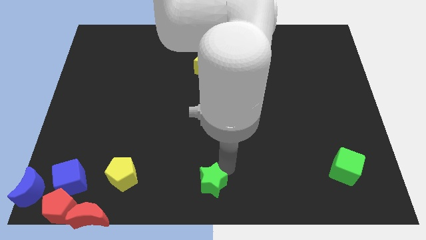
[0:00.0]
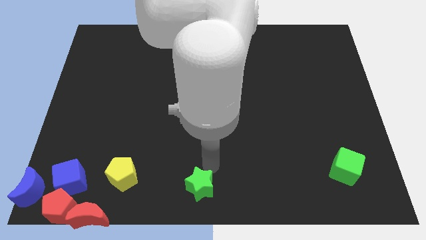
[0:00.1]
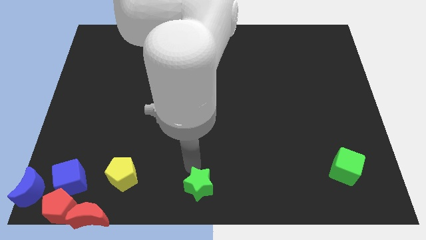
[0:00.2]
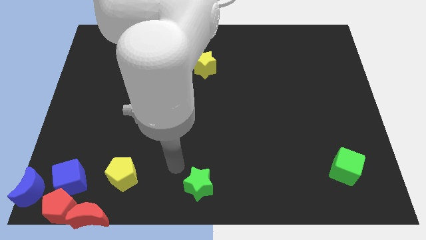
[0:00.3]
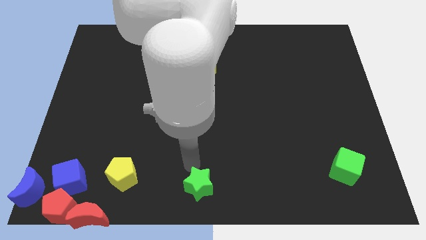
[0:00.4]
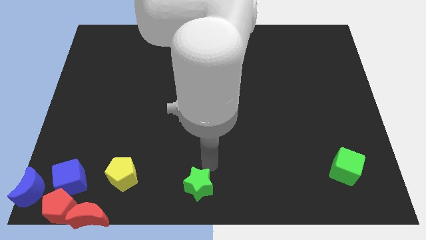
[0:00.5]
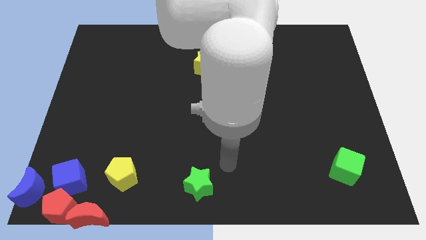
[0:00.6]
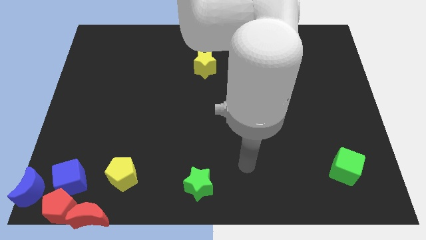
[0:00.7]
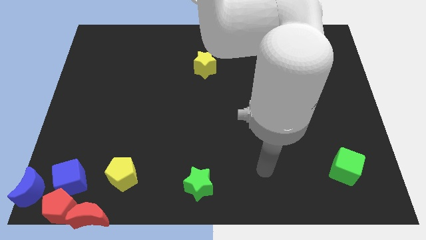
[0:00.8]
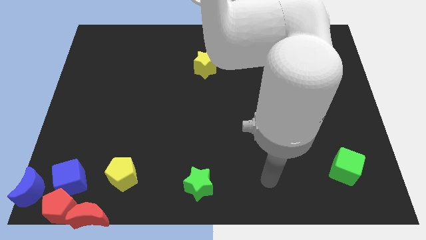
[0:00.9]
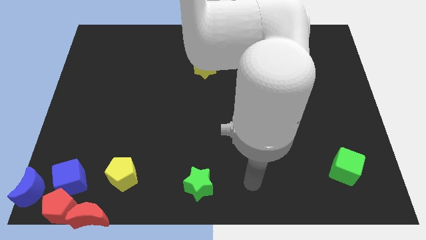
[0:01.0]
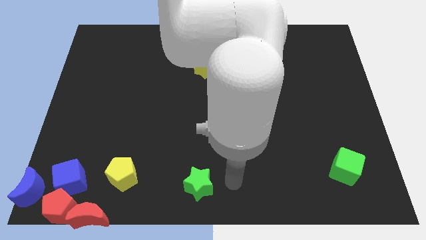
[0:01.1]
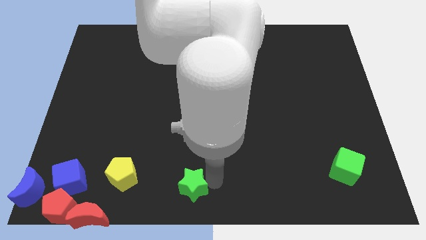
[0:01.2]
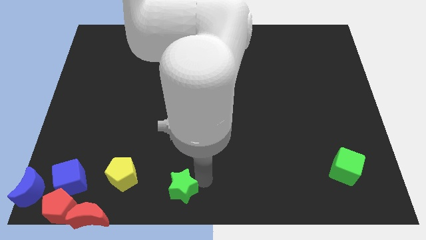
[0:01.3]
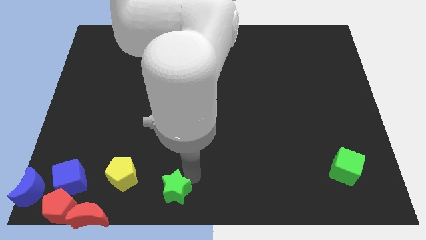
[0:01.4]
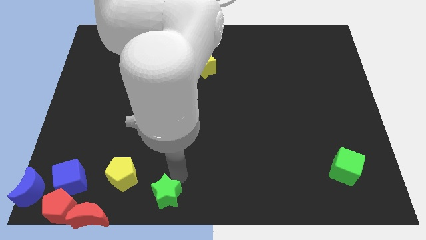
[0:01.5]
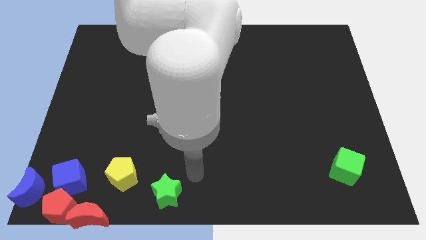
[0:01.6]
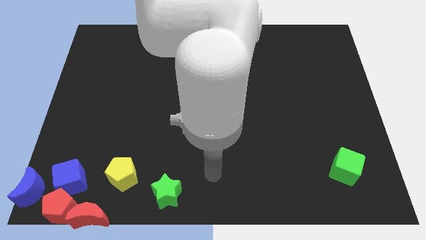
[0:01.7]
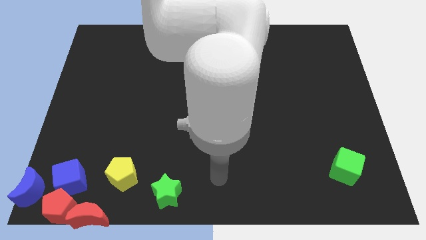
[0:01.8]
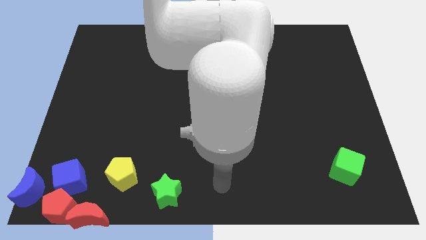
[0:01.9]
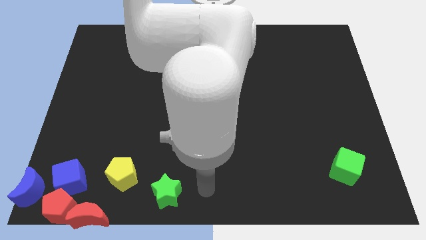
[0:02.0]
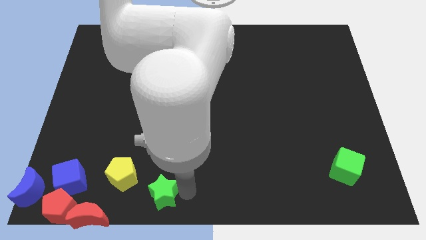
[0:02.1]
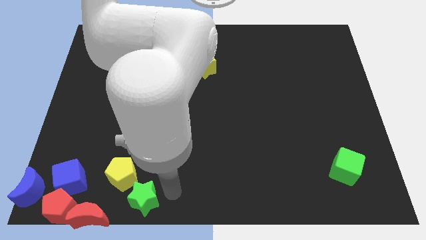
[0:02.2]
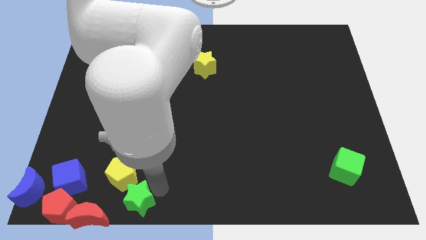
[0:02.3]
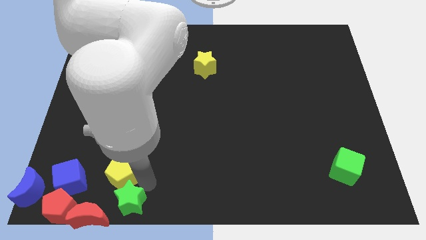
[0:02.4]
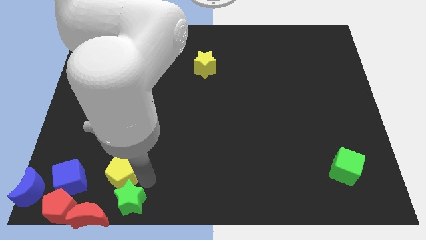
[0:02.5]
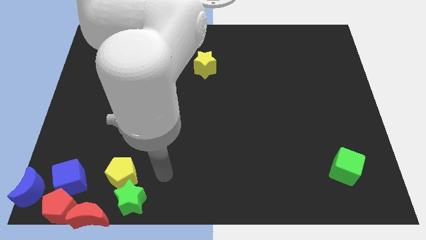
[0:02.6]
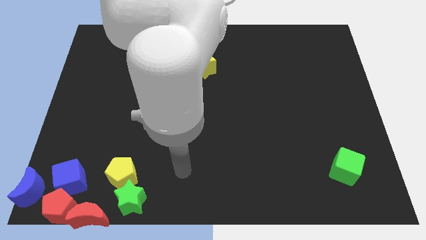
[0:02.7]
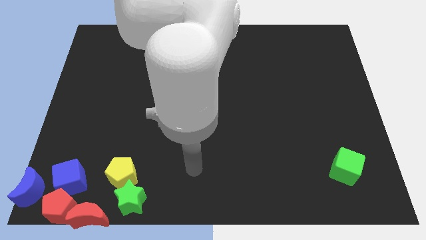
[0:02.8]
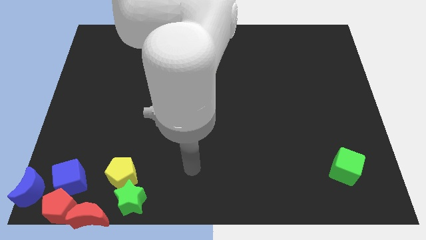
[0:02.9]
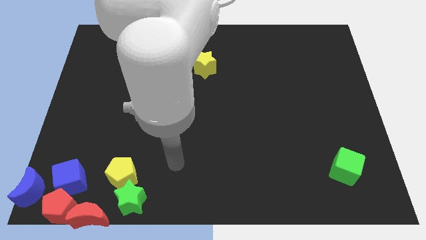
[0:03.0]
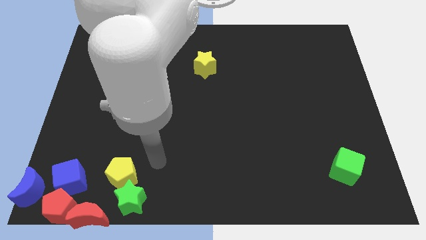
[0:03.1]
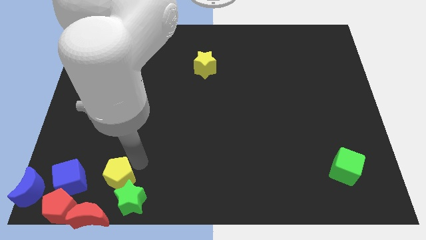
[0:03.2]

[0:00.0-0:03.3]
move green star to the bottom side of the yellow pentagon

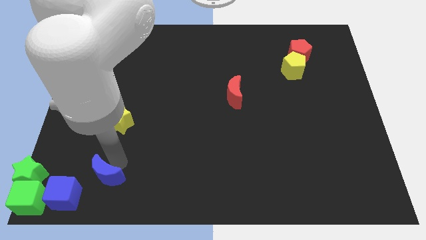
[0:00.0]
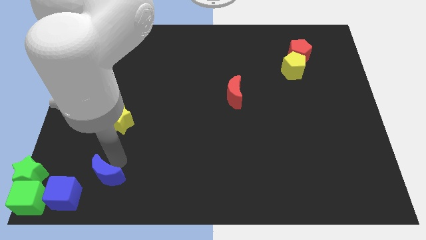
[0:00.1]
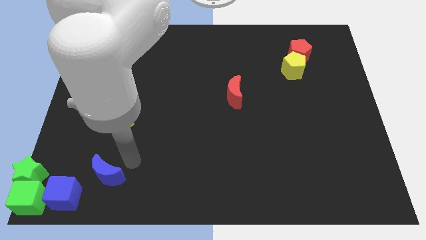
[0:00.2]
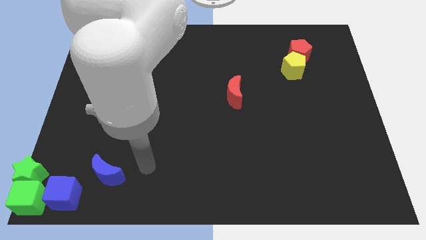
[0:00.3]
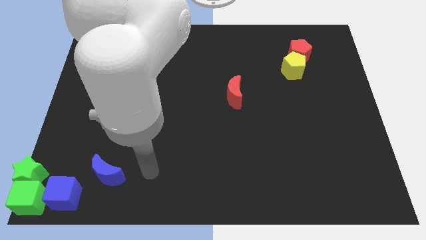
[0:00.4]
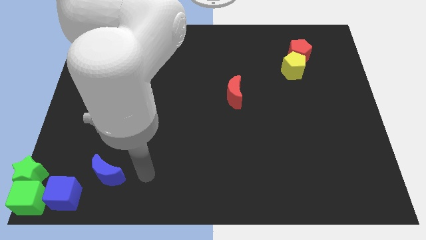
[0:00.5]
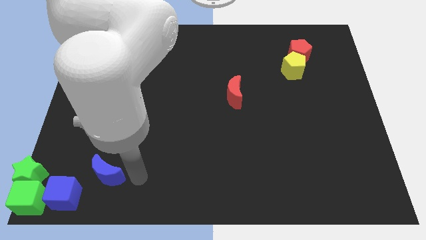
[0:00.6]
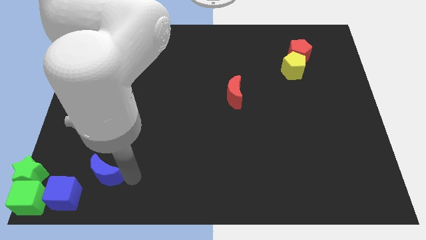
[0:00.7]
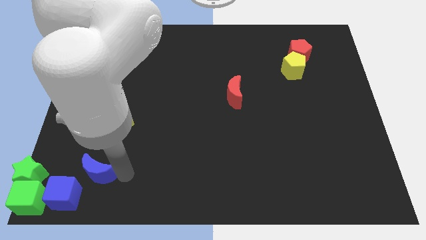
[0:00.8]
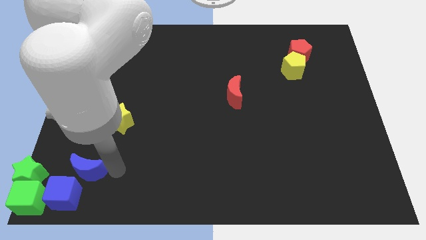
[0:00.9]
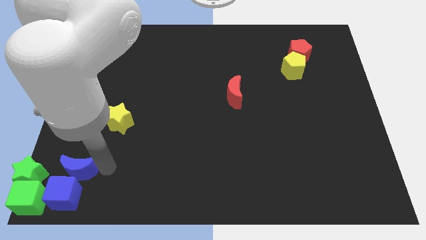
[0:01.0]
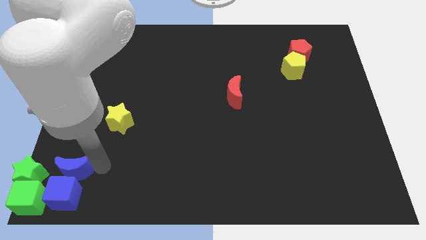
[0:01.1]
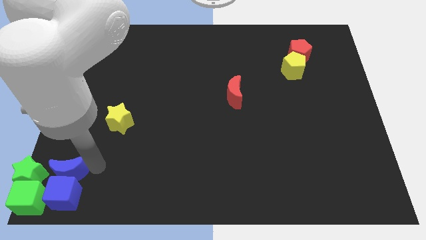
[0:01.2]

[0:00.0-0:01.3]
move the blue crescent above the blue cube

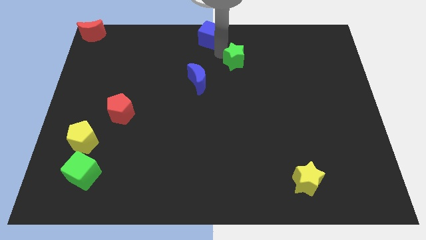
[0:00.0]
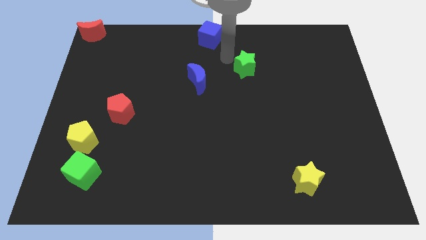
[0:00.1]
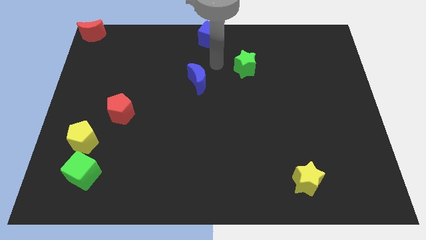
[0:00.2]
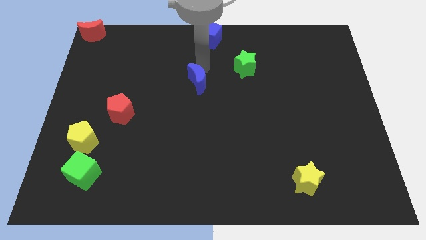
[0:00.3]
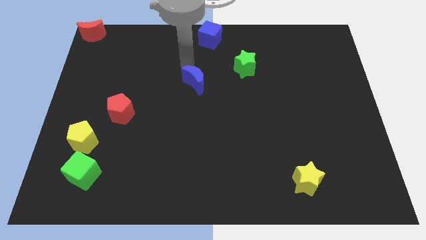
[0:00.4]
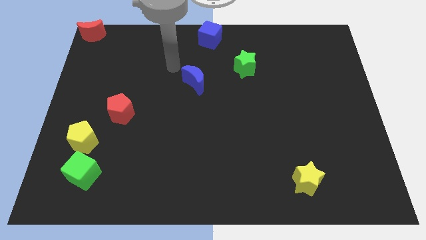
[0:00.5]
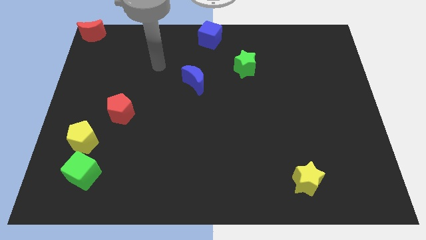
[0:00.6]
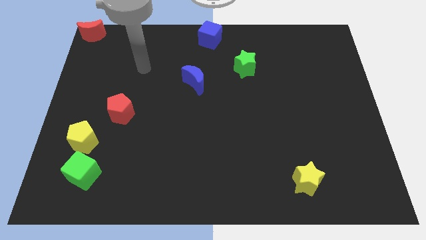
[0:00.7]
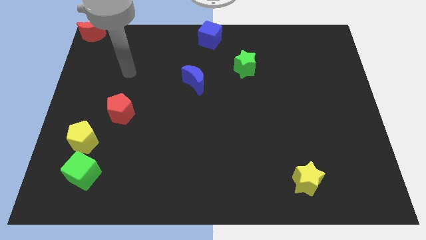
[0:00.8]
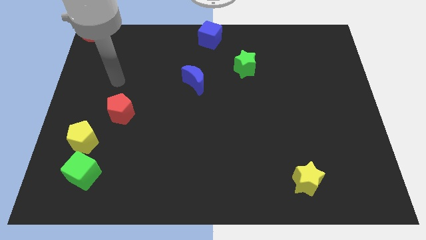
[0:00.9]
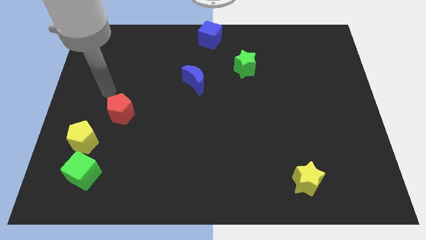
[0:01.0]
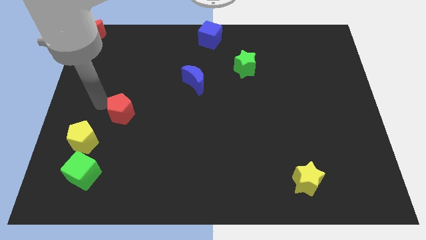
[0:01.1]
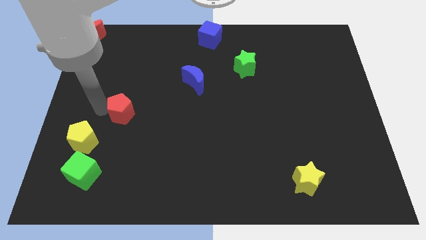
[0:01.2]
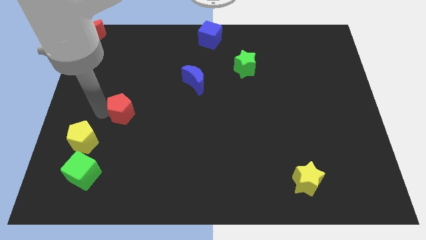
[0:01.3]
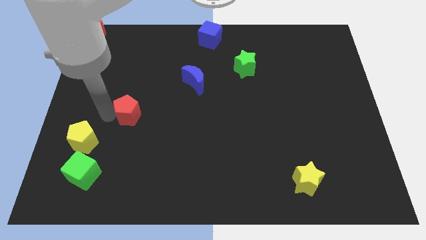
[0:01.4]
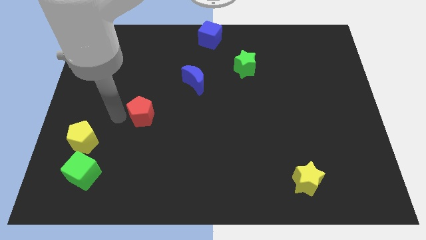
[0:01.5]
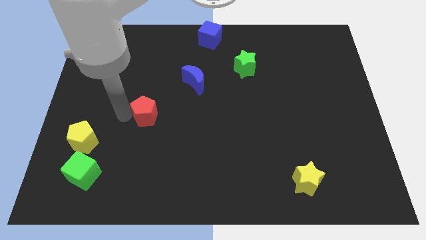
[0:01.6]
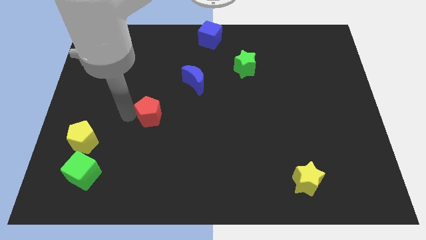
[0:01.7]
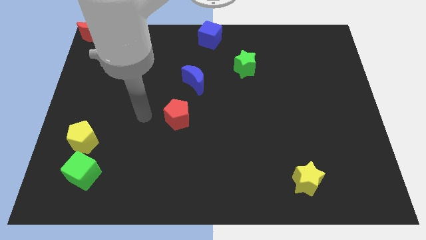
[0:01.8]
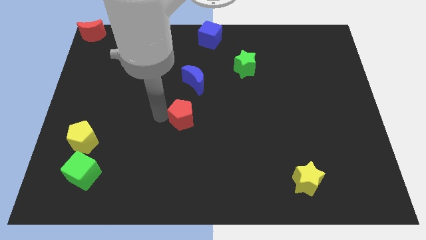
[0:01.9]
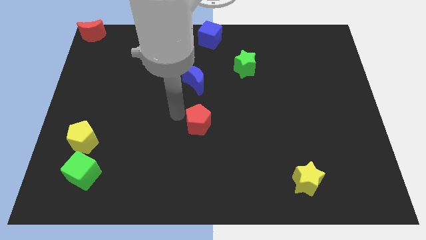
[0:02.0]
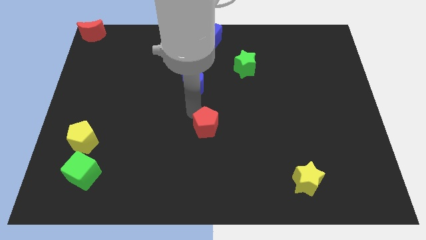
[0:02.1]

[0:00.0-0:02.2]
place red pentagon vertical to blue moon

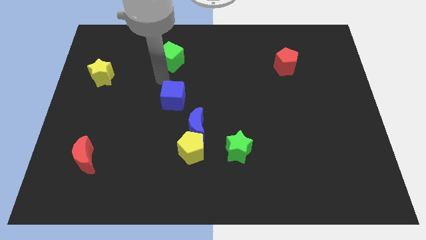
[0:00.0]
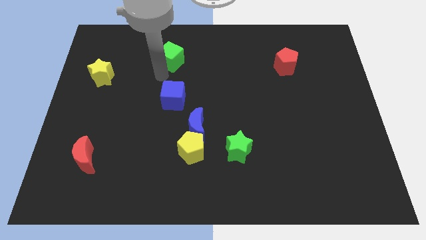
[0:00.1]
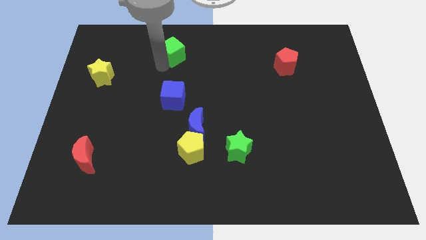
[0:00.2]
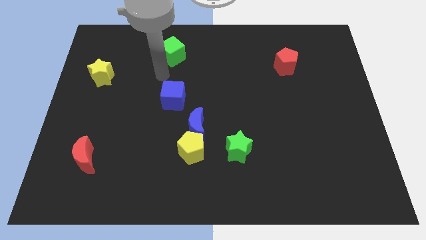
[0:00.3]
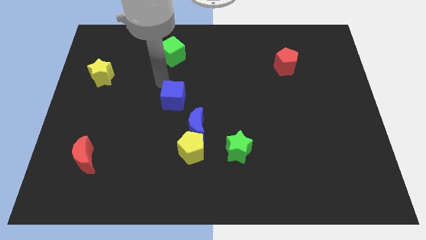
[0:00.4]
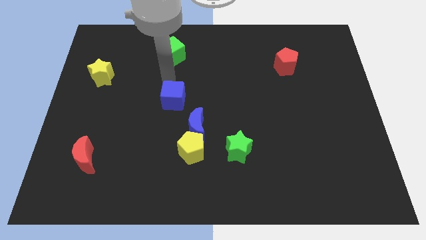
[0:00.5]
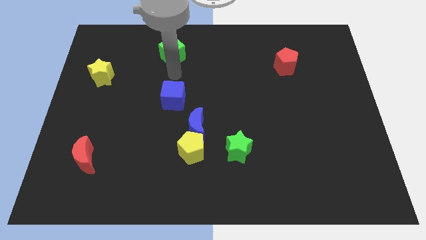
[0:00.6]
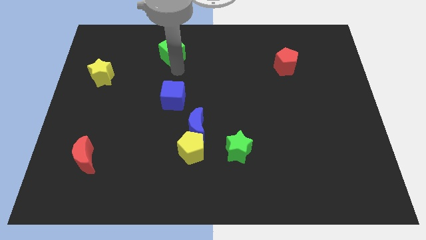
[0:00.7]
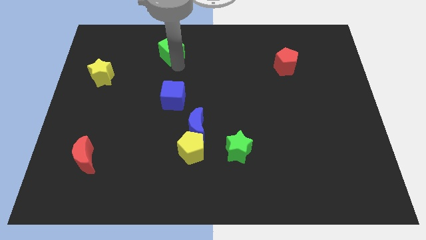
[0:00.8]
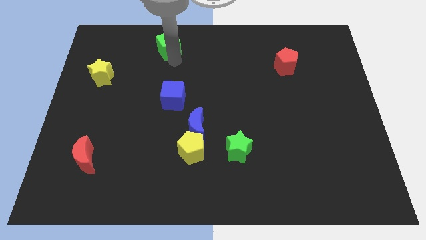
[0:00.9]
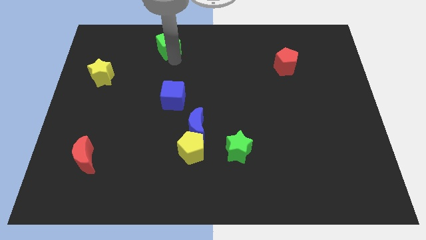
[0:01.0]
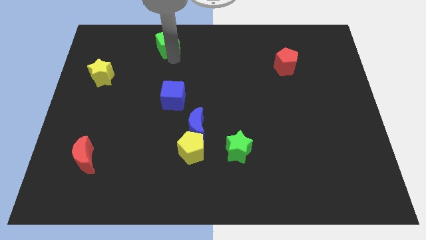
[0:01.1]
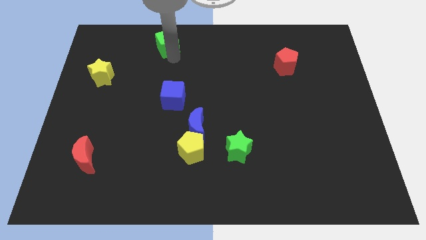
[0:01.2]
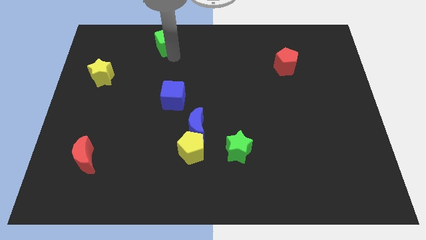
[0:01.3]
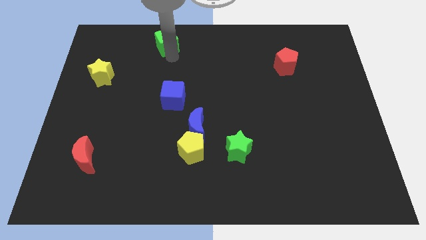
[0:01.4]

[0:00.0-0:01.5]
push the green cube slightly to the top

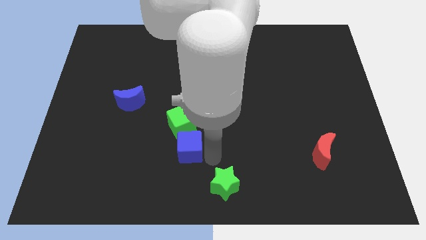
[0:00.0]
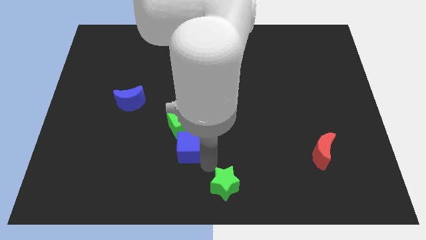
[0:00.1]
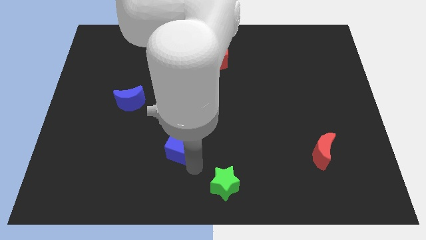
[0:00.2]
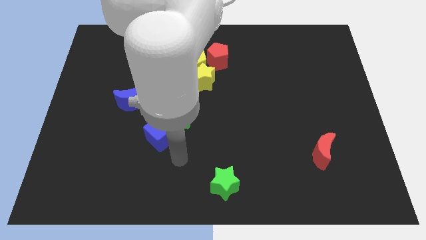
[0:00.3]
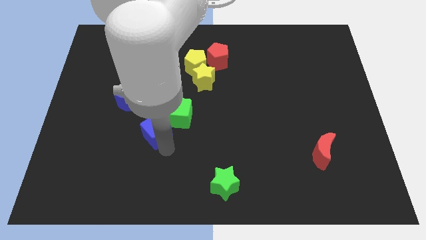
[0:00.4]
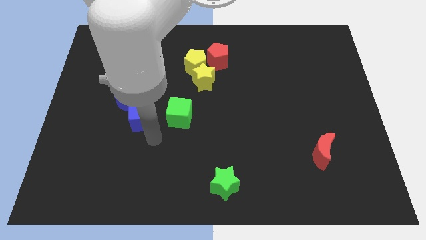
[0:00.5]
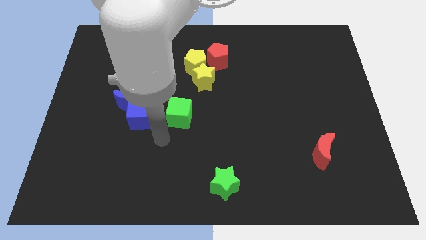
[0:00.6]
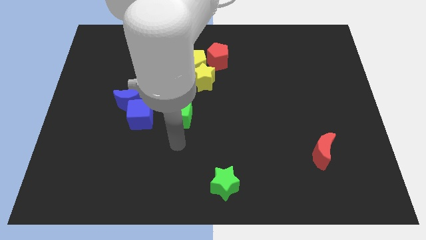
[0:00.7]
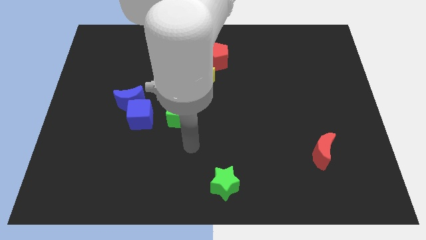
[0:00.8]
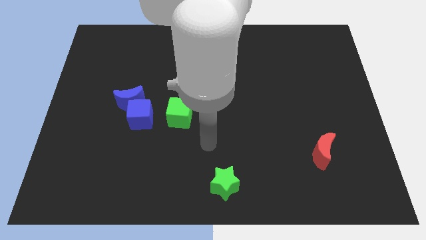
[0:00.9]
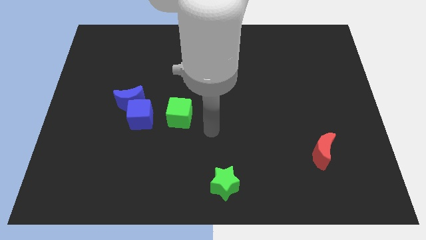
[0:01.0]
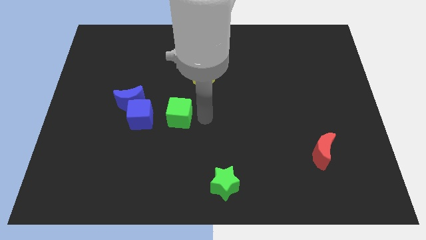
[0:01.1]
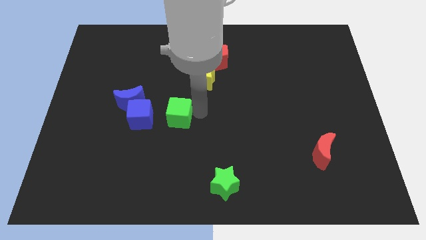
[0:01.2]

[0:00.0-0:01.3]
move the blue cube to the left of the green cube
